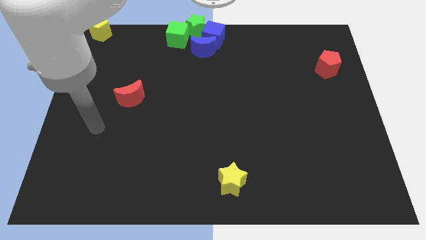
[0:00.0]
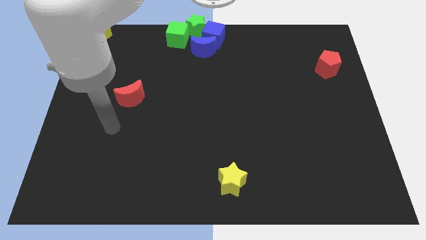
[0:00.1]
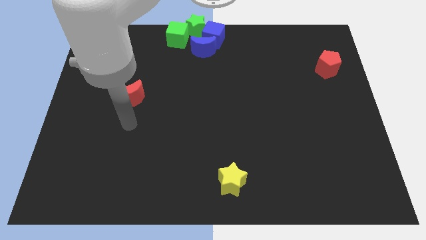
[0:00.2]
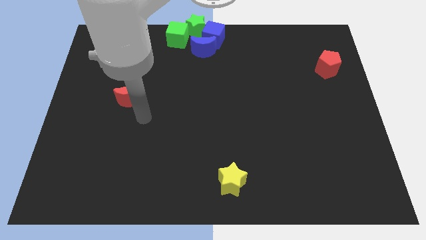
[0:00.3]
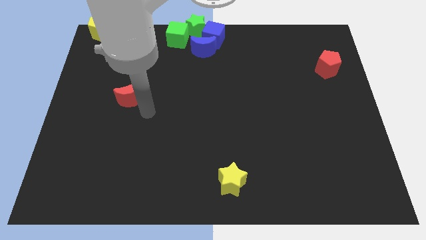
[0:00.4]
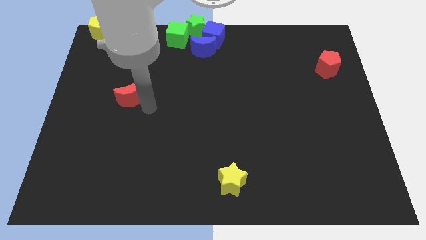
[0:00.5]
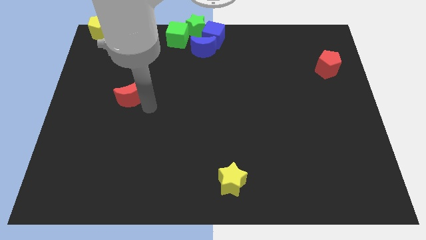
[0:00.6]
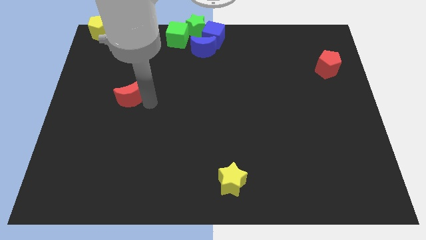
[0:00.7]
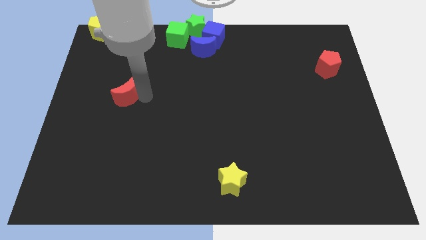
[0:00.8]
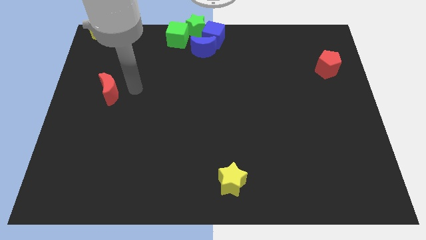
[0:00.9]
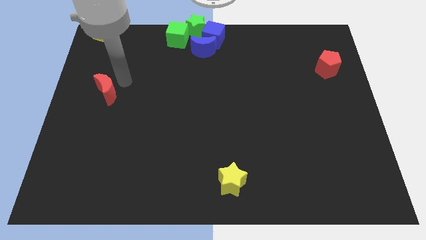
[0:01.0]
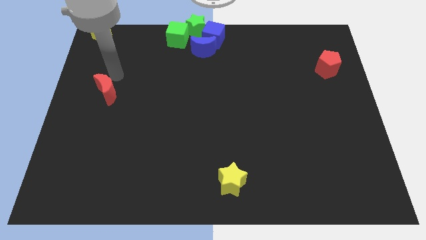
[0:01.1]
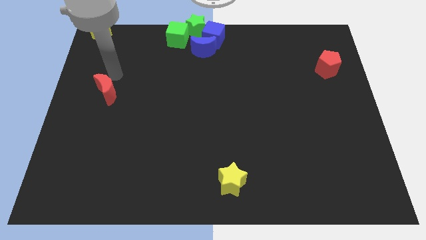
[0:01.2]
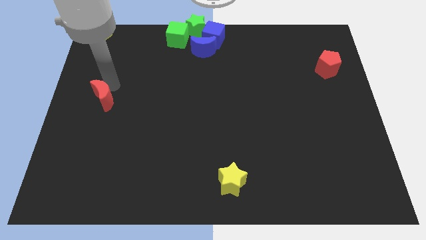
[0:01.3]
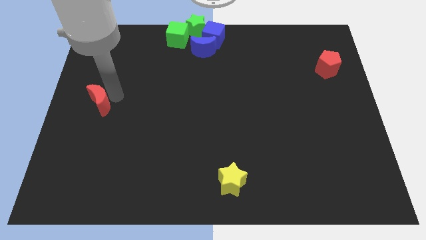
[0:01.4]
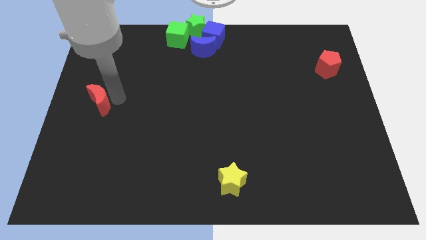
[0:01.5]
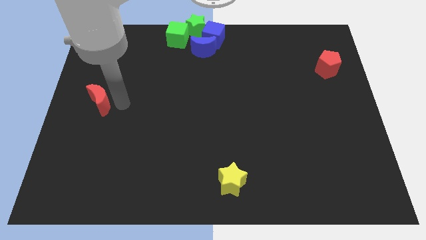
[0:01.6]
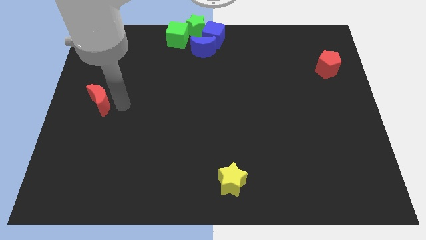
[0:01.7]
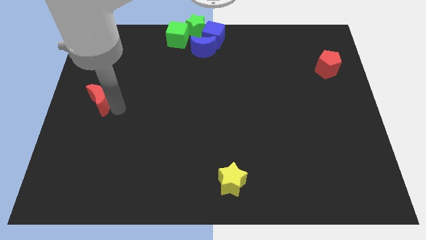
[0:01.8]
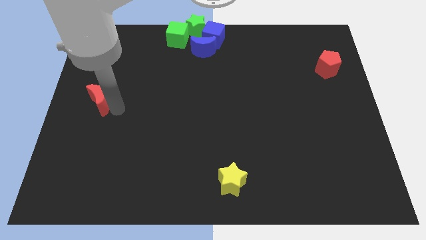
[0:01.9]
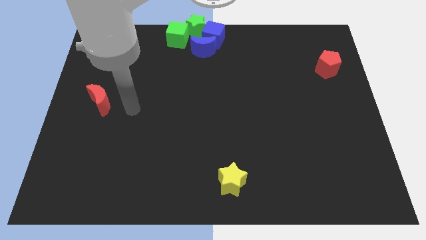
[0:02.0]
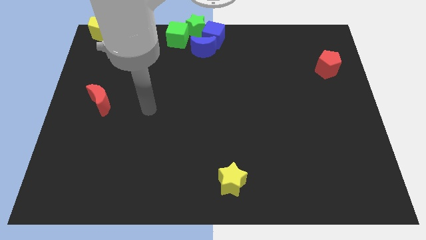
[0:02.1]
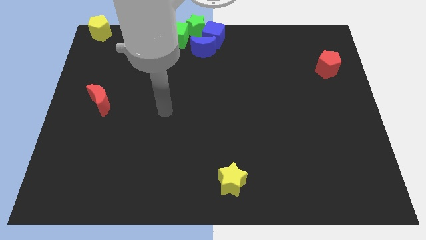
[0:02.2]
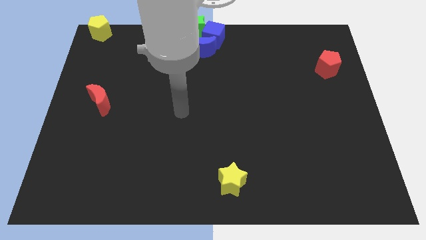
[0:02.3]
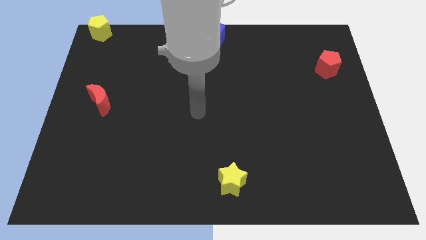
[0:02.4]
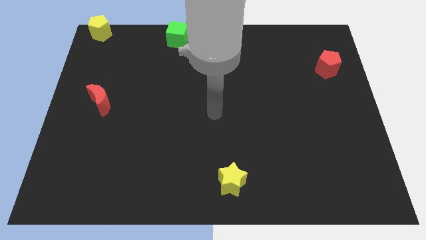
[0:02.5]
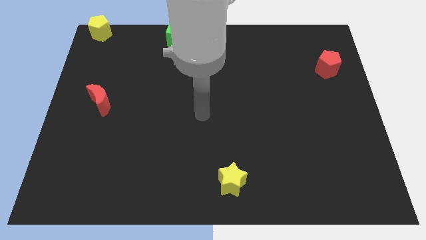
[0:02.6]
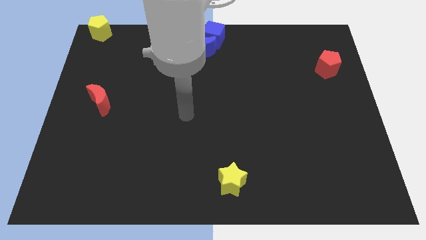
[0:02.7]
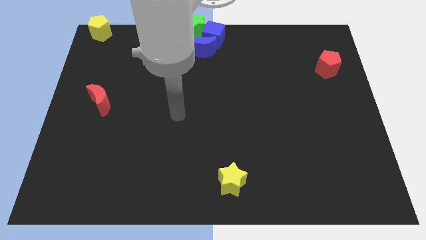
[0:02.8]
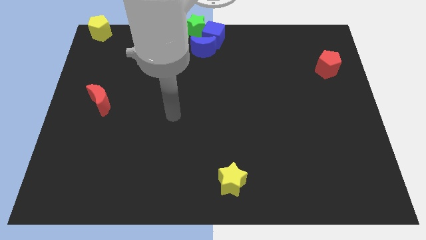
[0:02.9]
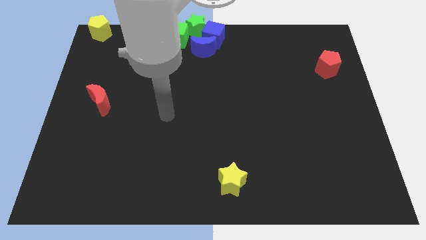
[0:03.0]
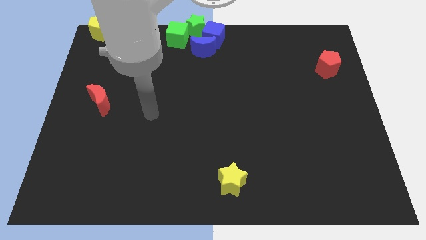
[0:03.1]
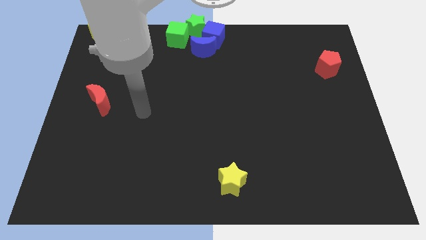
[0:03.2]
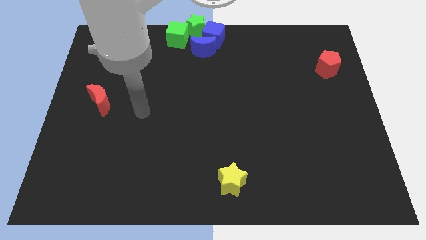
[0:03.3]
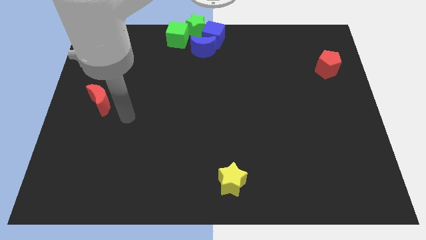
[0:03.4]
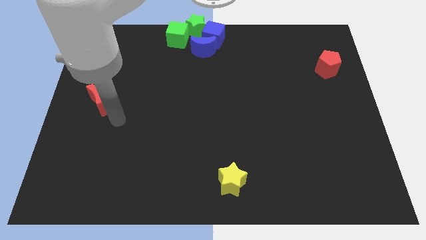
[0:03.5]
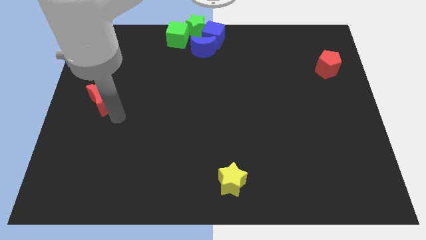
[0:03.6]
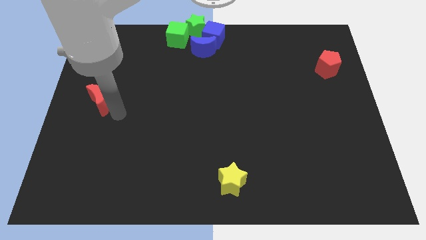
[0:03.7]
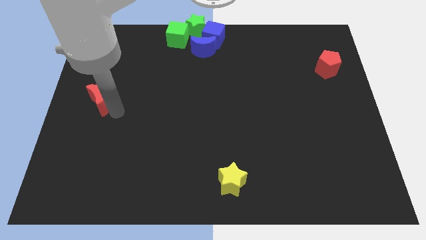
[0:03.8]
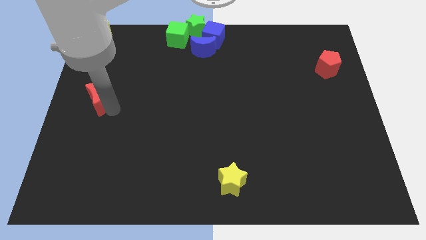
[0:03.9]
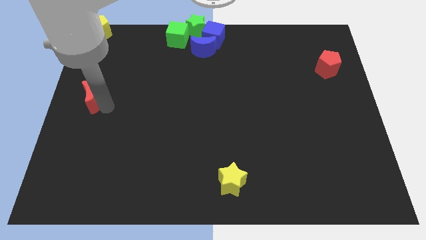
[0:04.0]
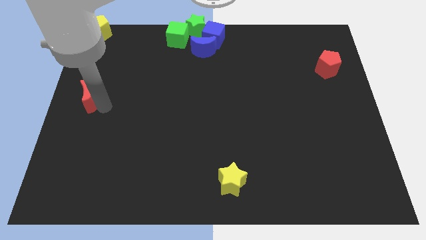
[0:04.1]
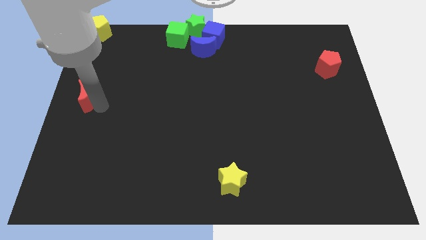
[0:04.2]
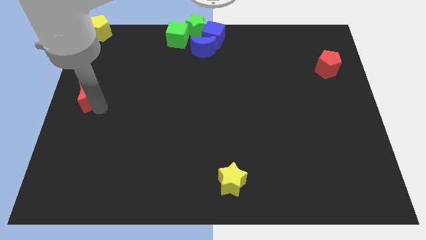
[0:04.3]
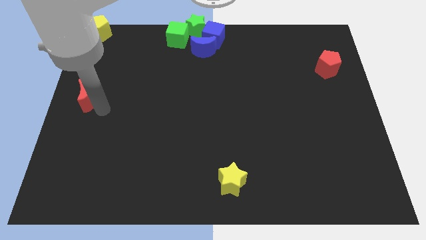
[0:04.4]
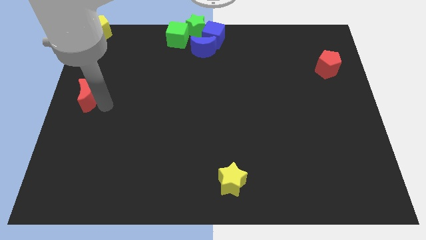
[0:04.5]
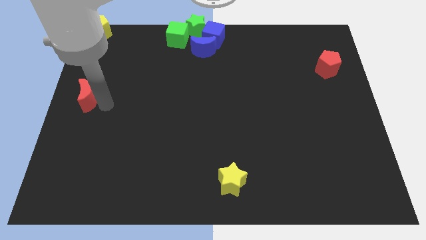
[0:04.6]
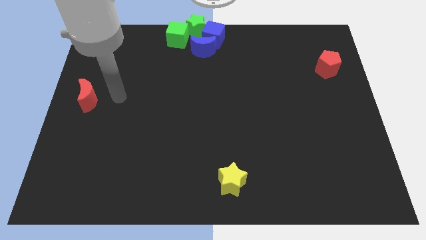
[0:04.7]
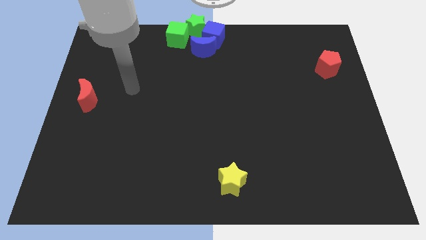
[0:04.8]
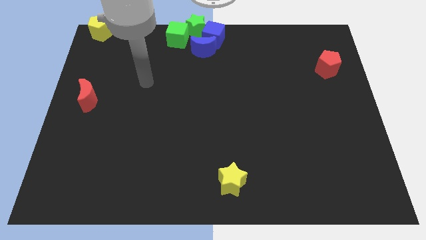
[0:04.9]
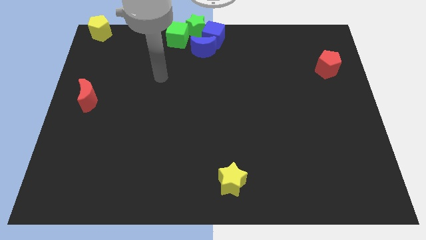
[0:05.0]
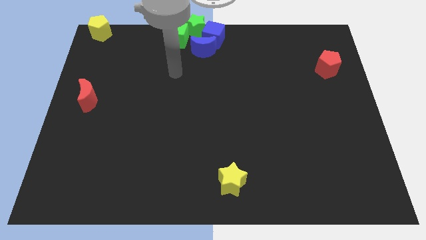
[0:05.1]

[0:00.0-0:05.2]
push the red moon to the center left of the board

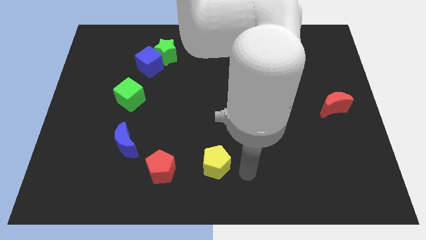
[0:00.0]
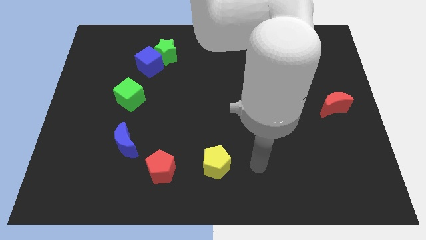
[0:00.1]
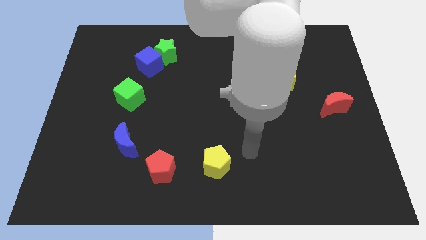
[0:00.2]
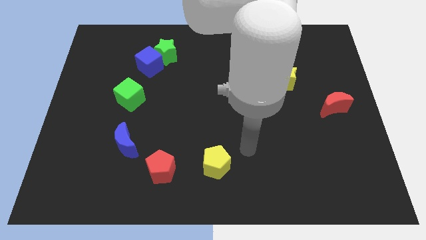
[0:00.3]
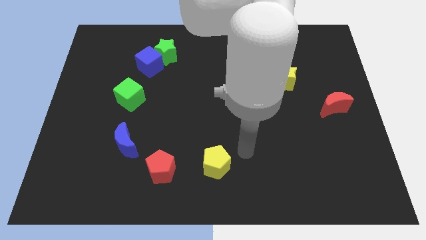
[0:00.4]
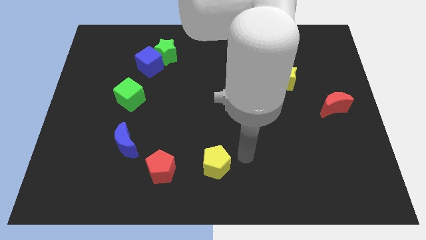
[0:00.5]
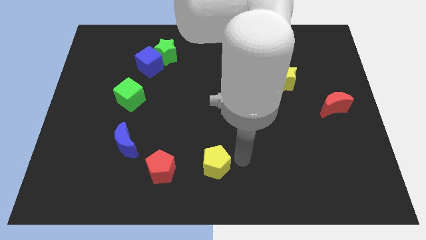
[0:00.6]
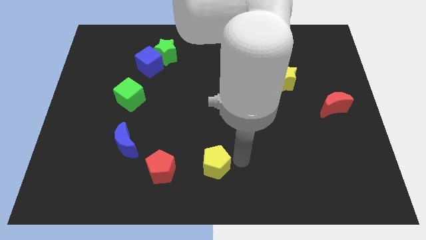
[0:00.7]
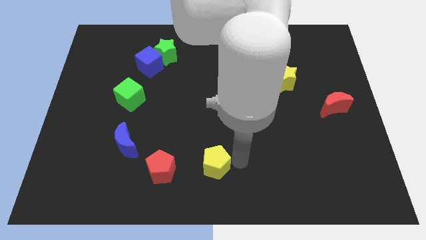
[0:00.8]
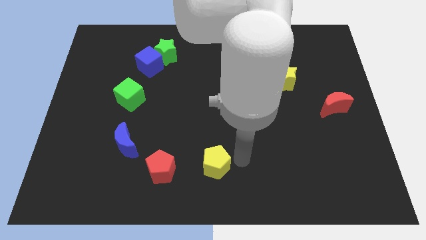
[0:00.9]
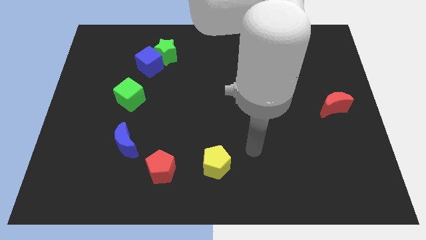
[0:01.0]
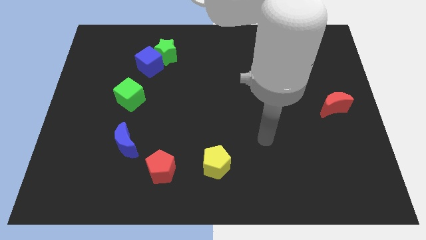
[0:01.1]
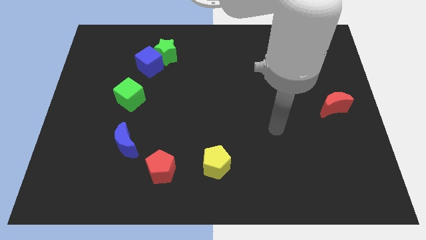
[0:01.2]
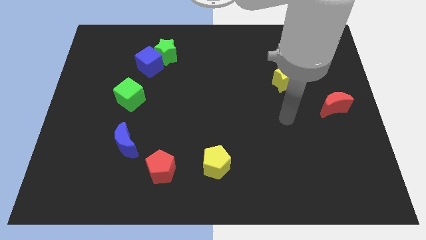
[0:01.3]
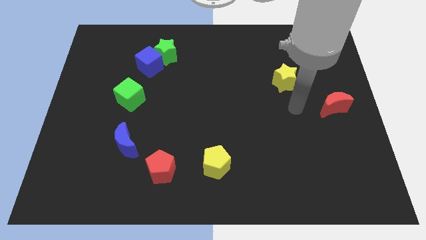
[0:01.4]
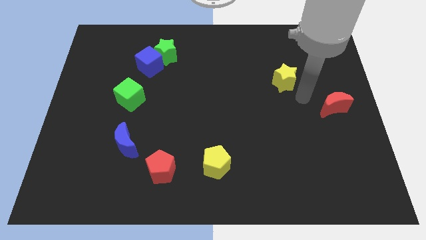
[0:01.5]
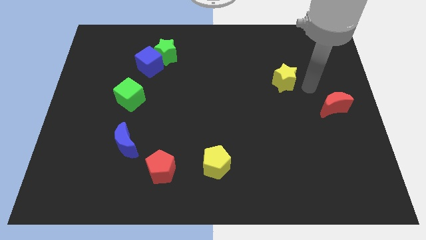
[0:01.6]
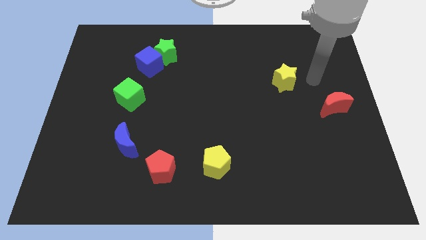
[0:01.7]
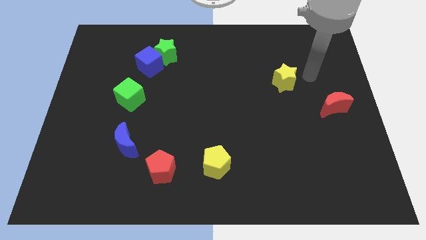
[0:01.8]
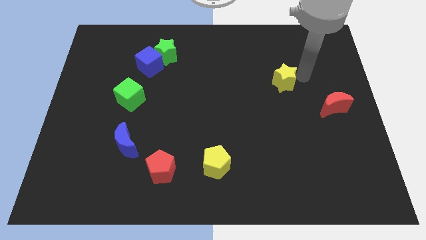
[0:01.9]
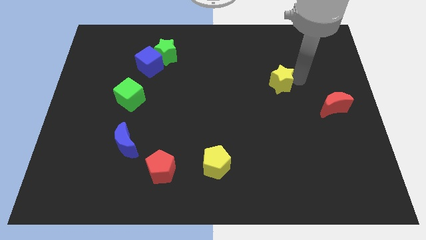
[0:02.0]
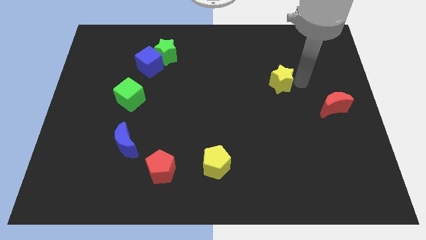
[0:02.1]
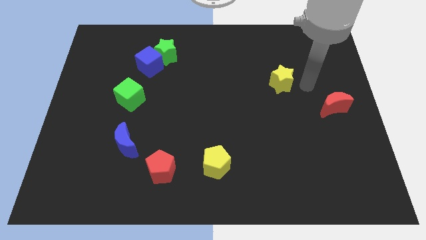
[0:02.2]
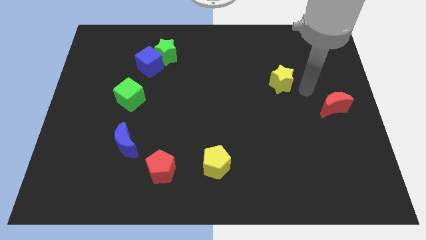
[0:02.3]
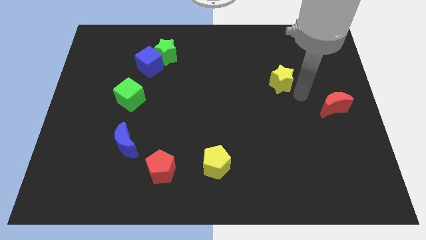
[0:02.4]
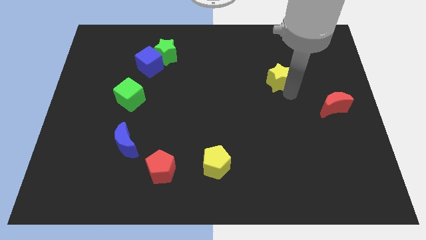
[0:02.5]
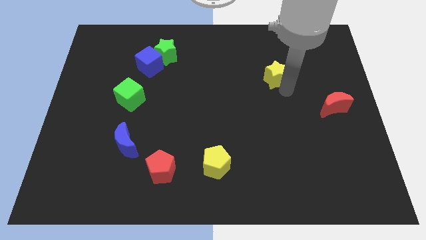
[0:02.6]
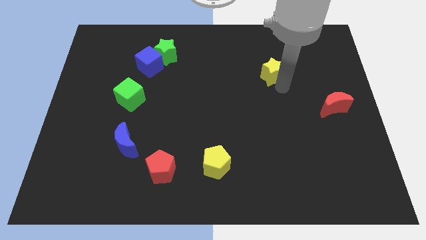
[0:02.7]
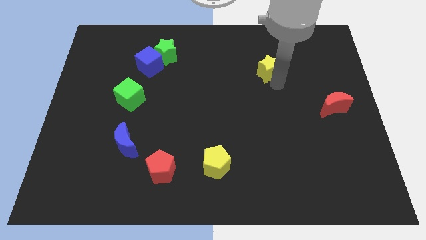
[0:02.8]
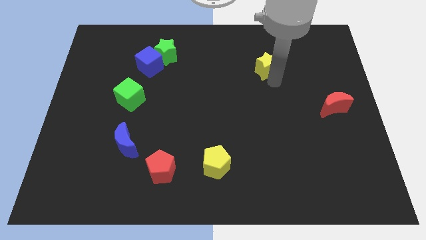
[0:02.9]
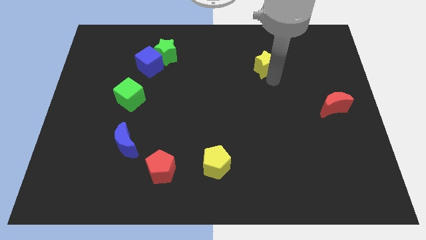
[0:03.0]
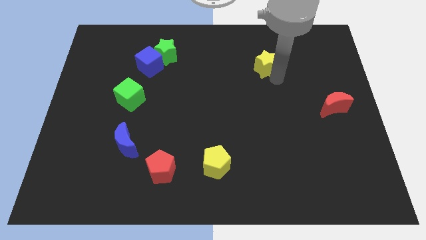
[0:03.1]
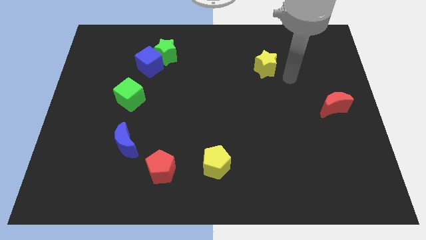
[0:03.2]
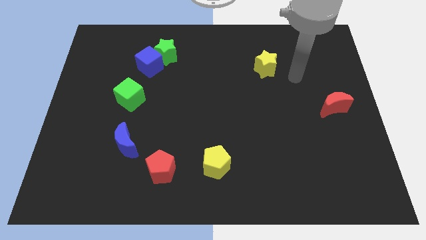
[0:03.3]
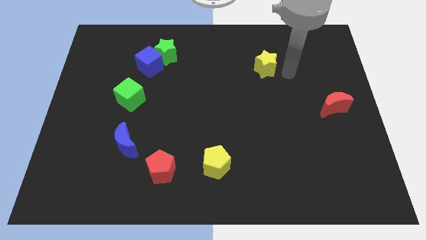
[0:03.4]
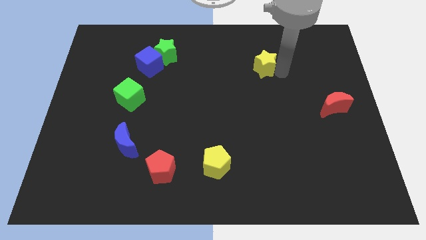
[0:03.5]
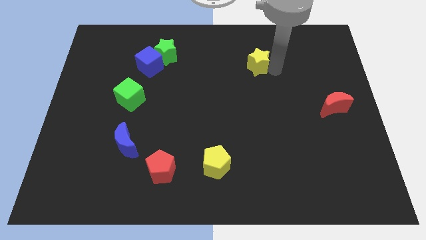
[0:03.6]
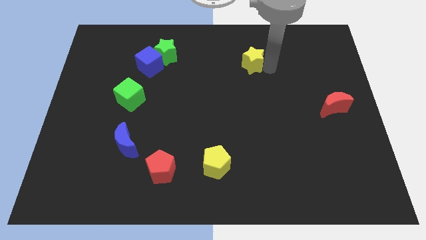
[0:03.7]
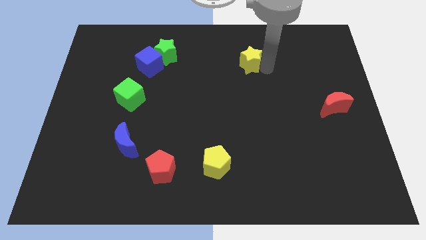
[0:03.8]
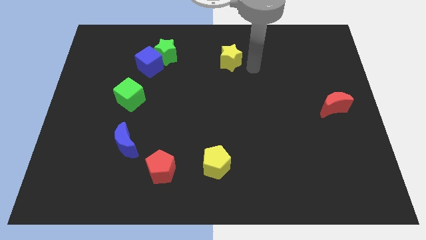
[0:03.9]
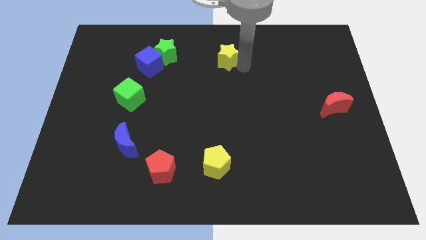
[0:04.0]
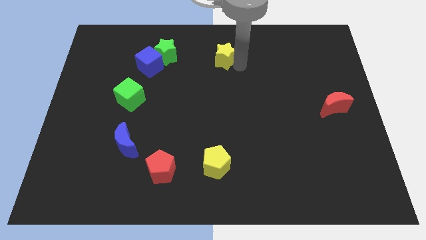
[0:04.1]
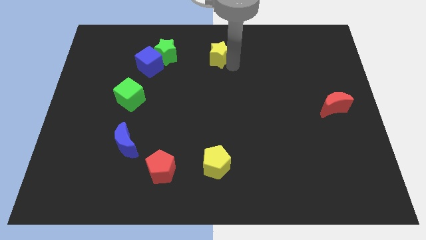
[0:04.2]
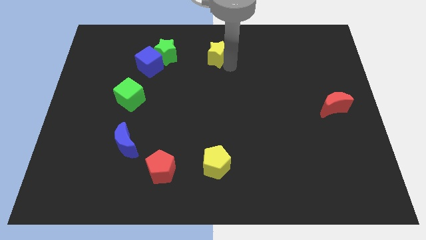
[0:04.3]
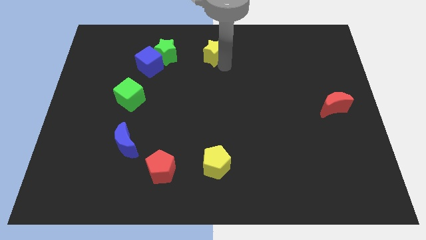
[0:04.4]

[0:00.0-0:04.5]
move the yellow star above the yellow pentagon
